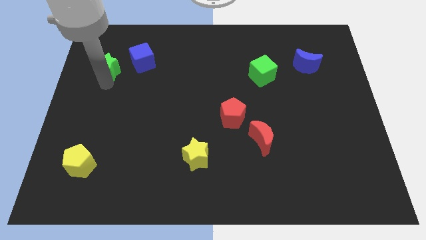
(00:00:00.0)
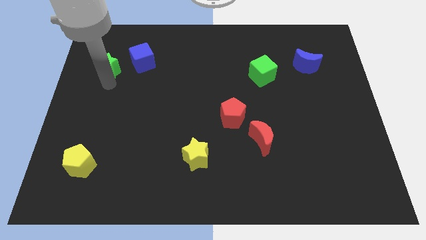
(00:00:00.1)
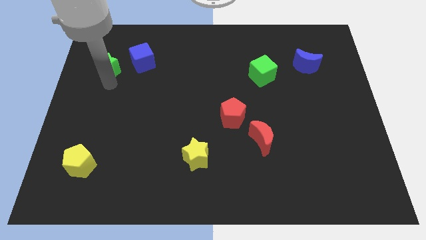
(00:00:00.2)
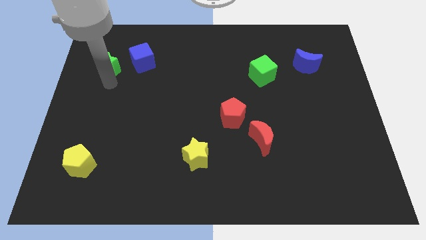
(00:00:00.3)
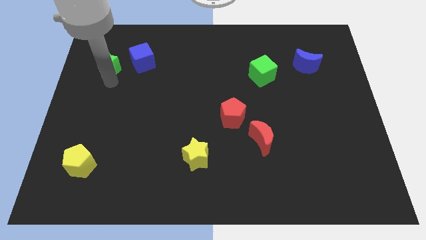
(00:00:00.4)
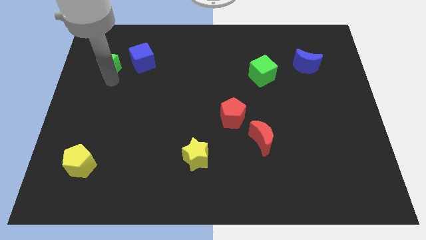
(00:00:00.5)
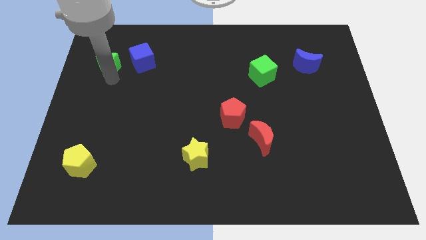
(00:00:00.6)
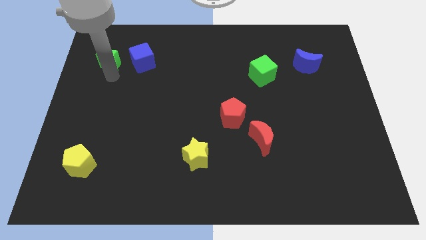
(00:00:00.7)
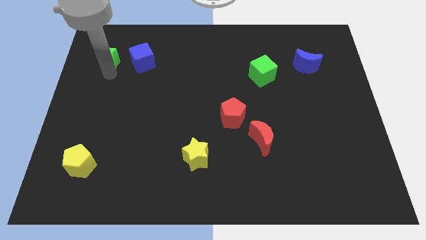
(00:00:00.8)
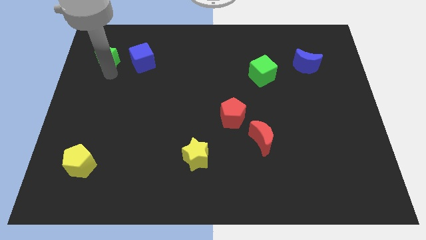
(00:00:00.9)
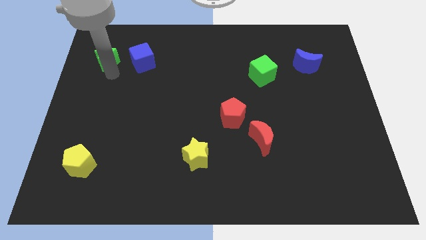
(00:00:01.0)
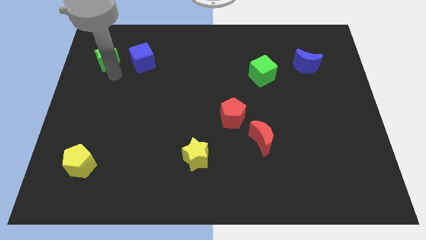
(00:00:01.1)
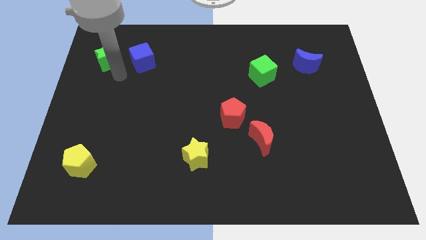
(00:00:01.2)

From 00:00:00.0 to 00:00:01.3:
push the green star parallel to blue cube

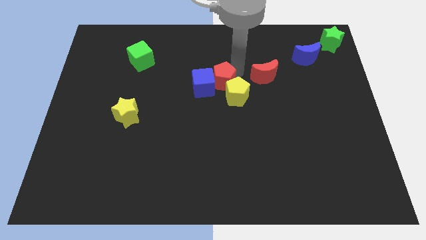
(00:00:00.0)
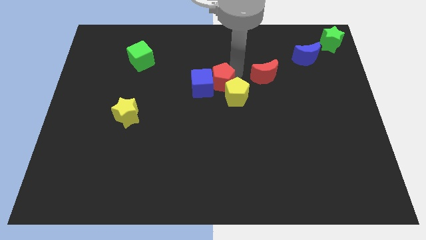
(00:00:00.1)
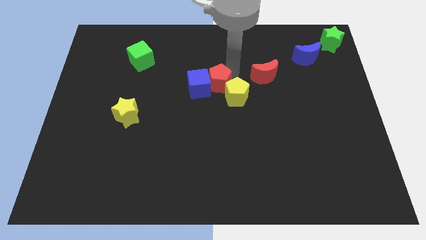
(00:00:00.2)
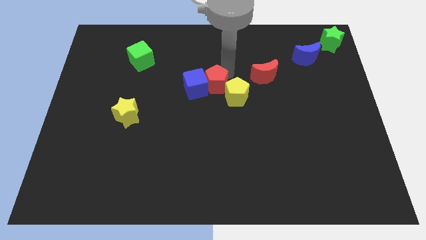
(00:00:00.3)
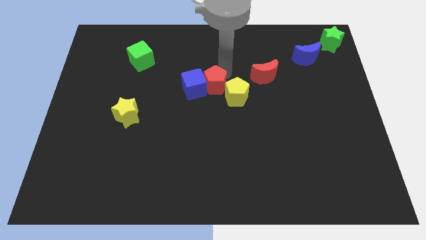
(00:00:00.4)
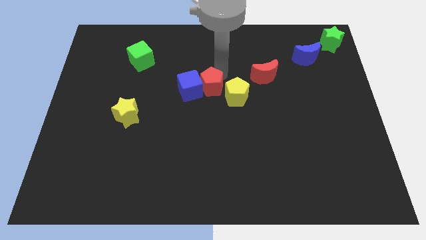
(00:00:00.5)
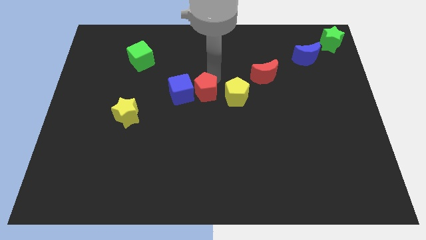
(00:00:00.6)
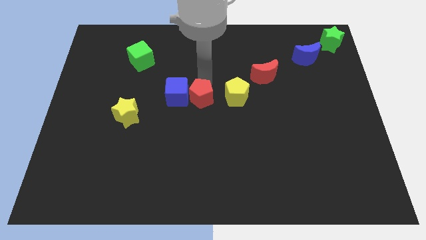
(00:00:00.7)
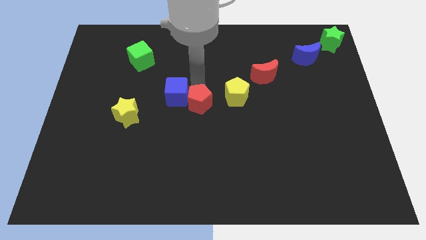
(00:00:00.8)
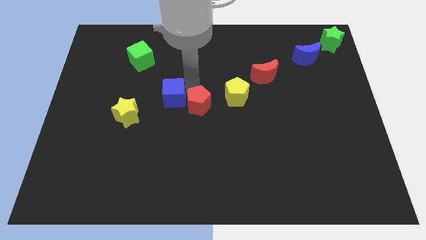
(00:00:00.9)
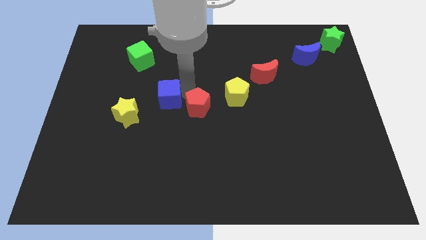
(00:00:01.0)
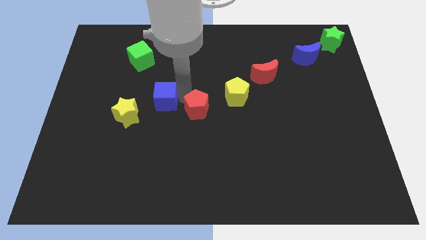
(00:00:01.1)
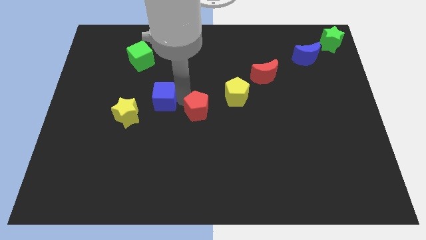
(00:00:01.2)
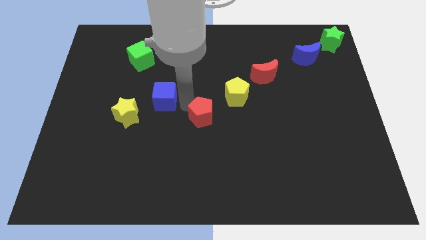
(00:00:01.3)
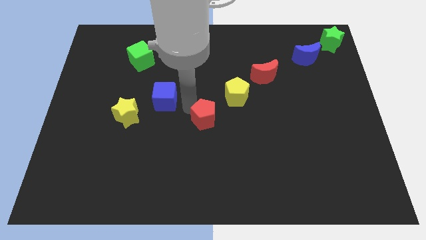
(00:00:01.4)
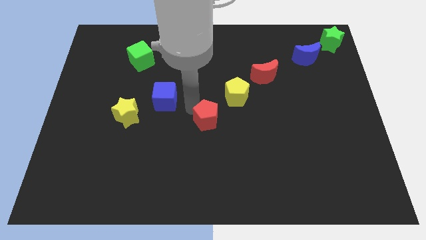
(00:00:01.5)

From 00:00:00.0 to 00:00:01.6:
separate the blue cube from the red pentagon

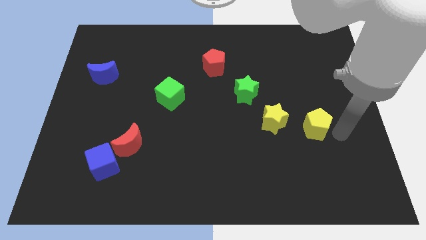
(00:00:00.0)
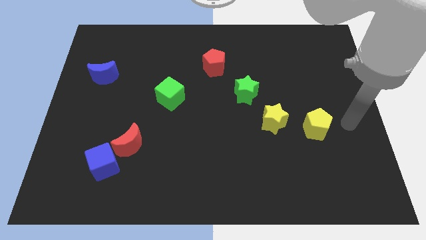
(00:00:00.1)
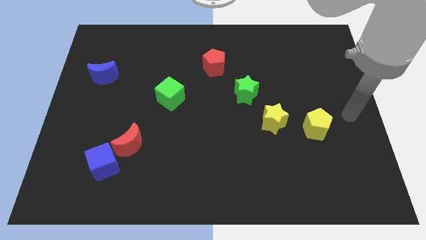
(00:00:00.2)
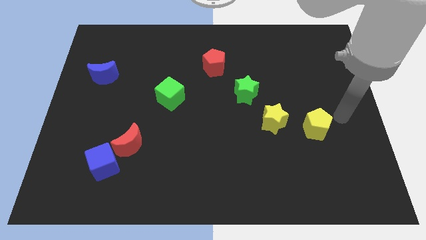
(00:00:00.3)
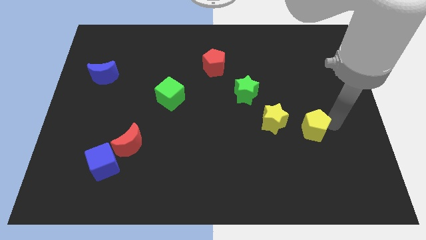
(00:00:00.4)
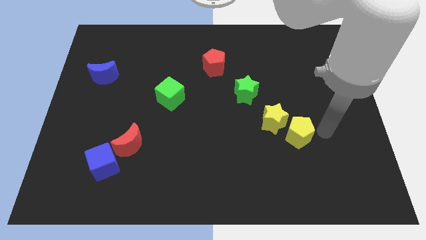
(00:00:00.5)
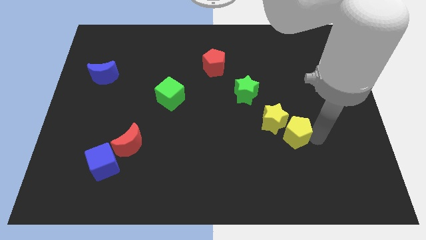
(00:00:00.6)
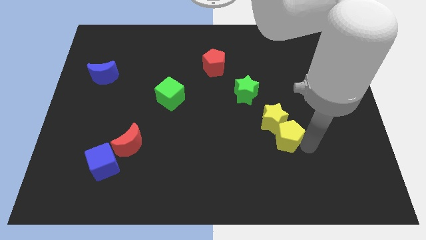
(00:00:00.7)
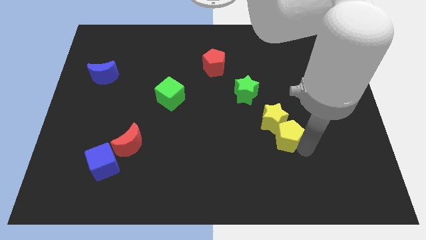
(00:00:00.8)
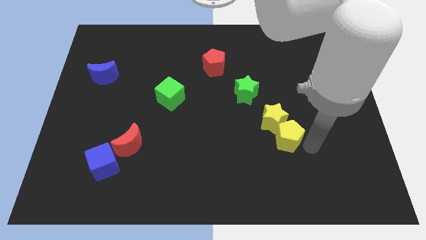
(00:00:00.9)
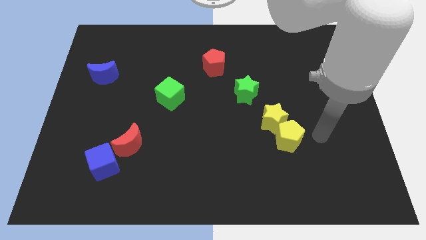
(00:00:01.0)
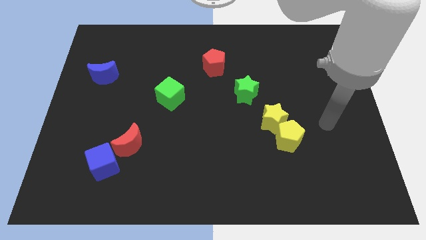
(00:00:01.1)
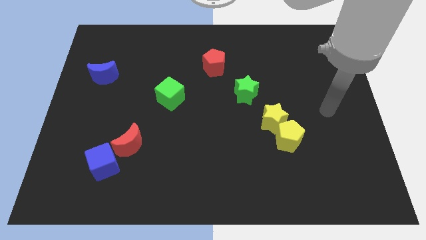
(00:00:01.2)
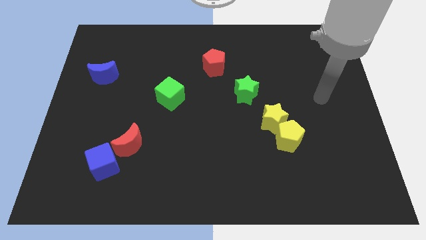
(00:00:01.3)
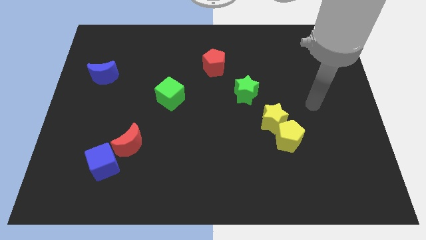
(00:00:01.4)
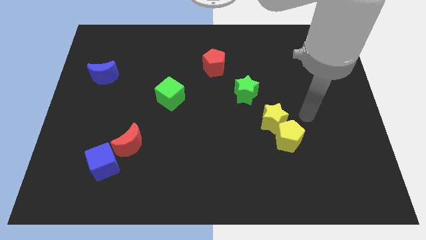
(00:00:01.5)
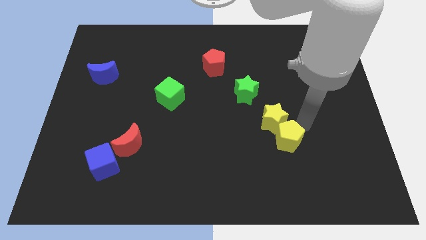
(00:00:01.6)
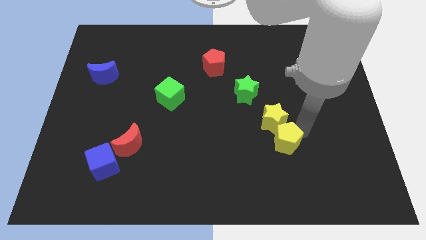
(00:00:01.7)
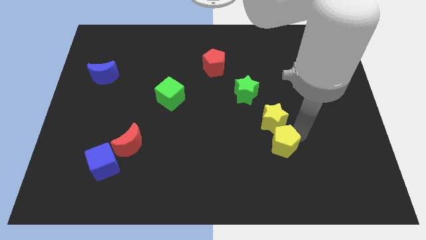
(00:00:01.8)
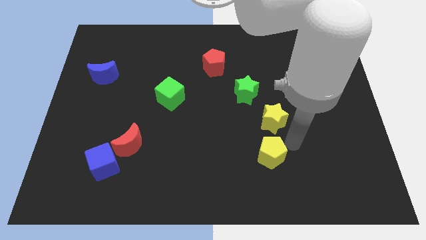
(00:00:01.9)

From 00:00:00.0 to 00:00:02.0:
move the yellow pentagon below the yellow star

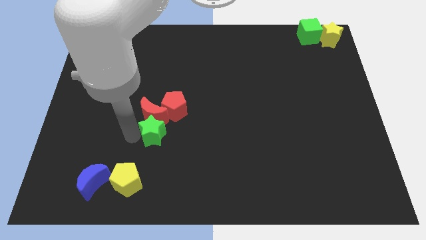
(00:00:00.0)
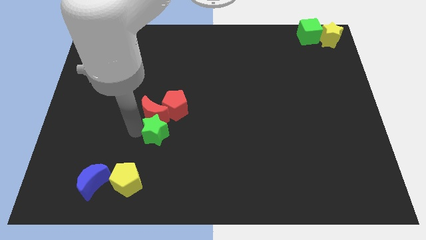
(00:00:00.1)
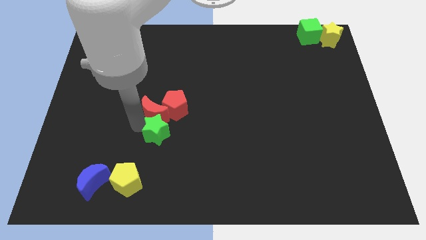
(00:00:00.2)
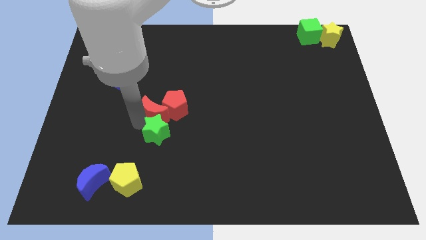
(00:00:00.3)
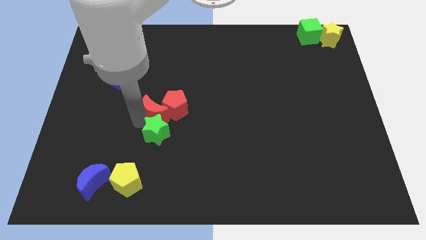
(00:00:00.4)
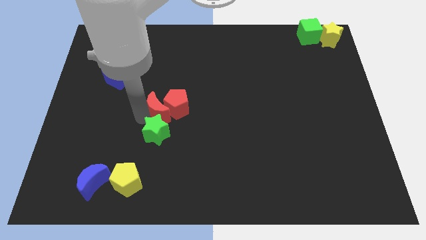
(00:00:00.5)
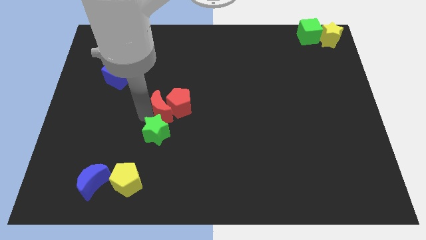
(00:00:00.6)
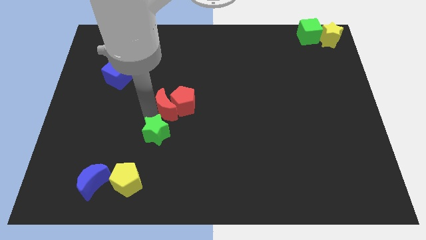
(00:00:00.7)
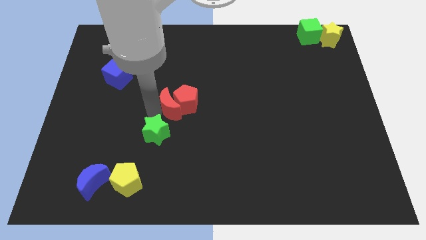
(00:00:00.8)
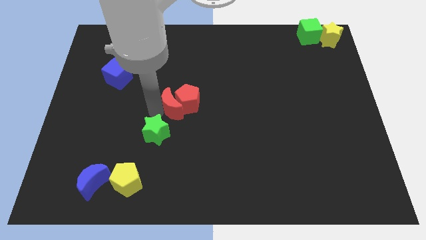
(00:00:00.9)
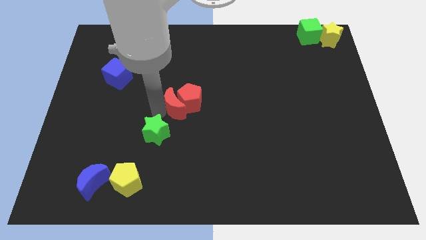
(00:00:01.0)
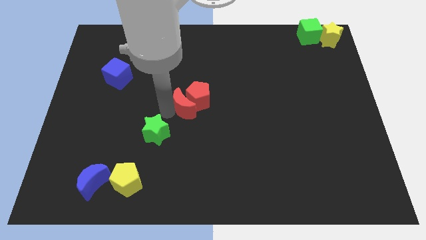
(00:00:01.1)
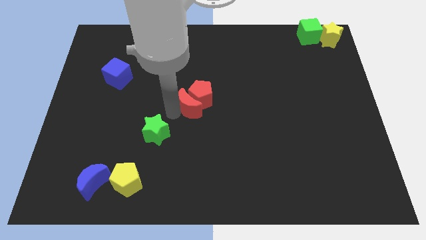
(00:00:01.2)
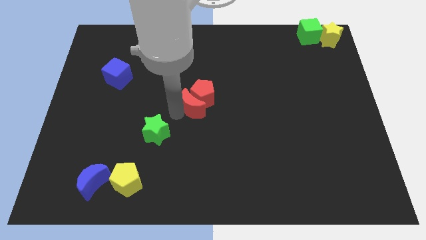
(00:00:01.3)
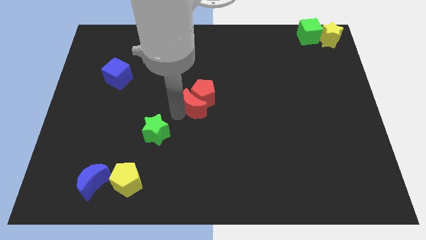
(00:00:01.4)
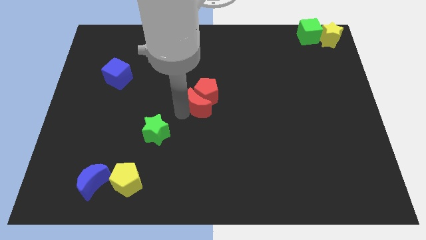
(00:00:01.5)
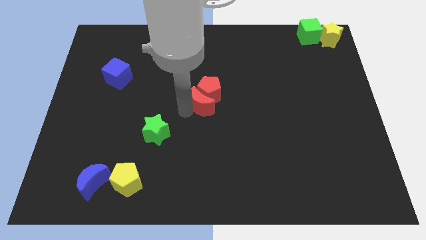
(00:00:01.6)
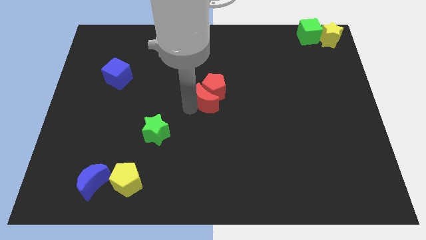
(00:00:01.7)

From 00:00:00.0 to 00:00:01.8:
take the group of red blocks away from the green star

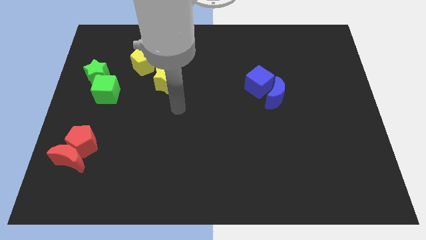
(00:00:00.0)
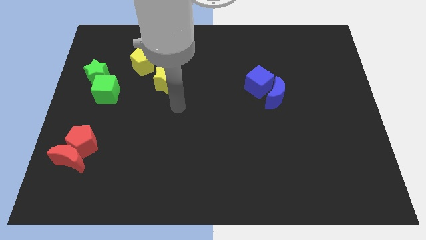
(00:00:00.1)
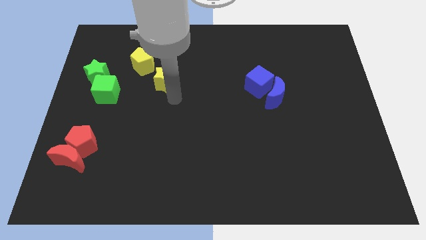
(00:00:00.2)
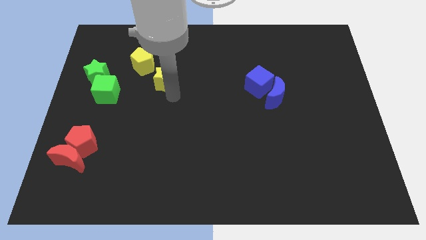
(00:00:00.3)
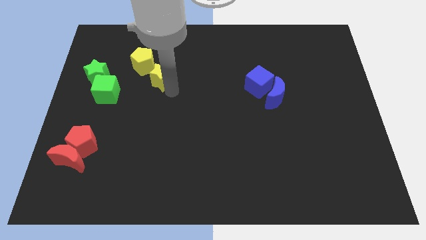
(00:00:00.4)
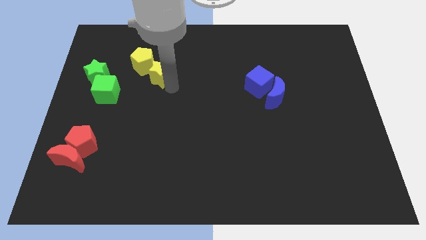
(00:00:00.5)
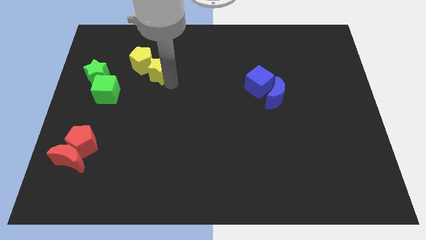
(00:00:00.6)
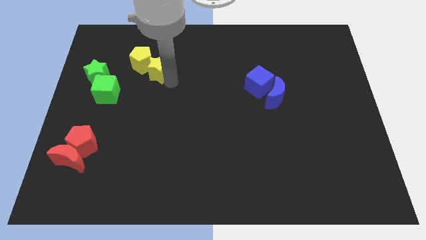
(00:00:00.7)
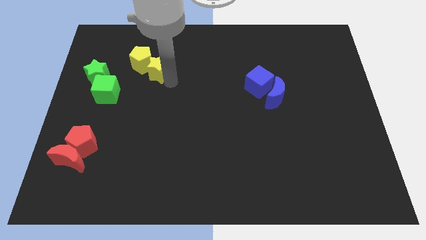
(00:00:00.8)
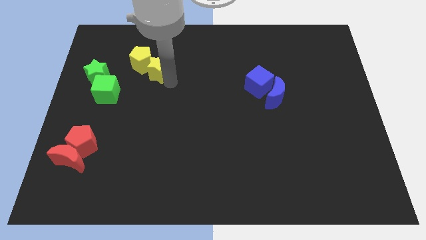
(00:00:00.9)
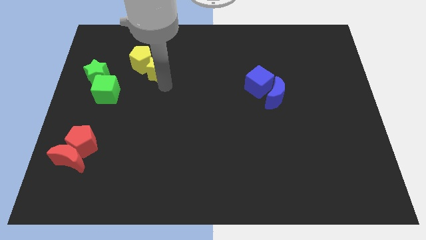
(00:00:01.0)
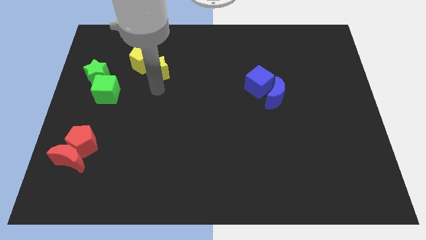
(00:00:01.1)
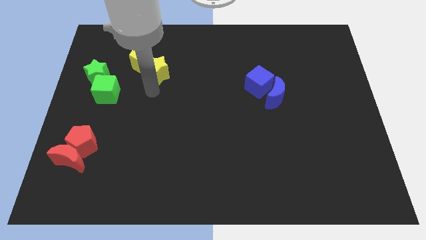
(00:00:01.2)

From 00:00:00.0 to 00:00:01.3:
push the yellow star into the yellow pentagon

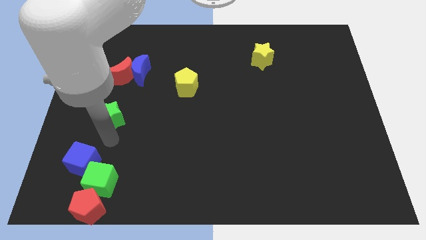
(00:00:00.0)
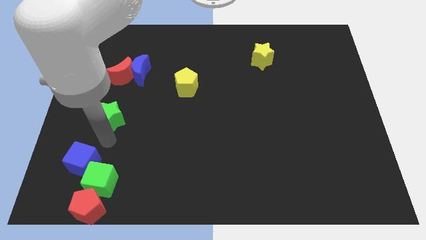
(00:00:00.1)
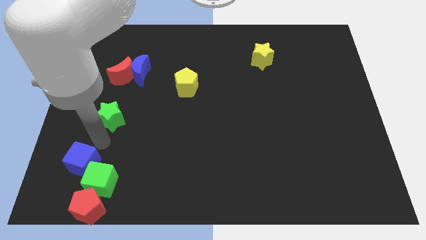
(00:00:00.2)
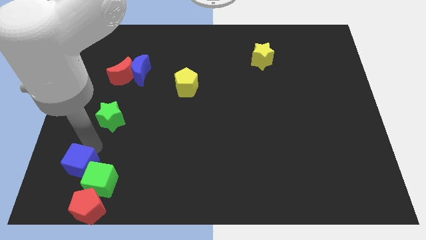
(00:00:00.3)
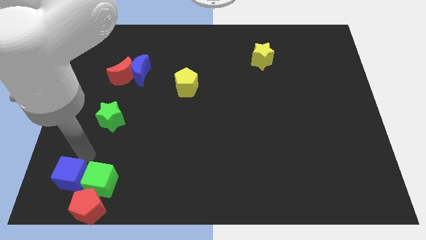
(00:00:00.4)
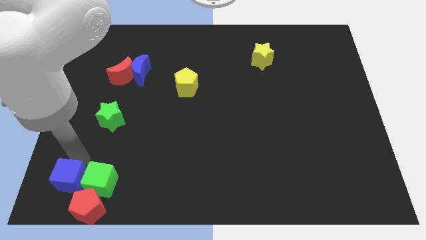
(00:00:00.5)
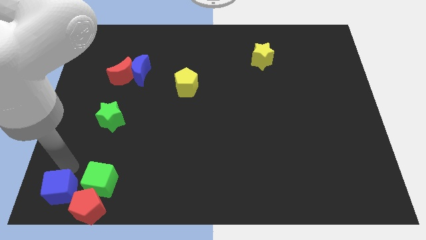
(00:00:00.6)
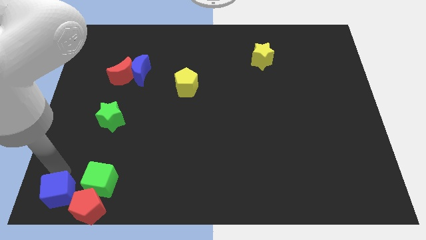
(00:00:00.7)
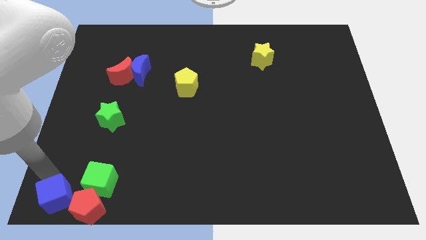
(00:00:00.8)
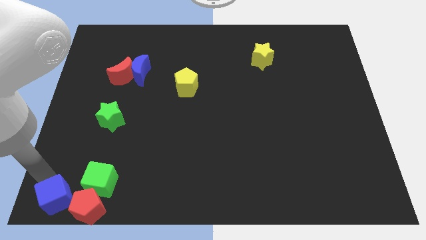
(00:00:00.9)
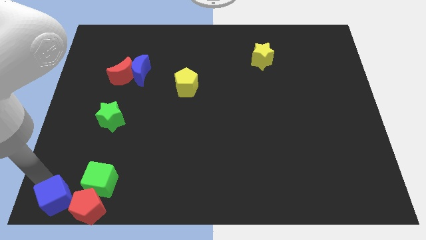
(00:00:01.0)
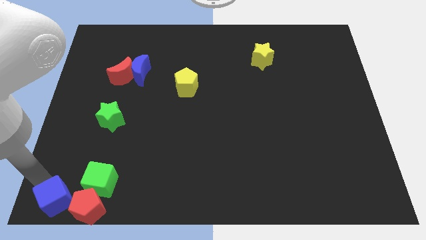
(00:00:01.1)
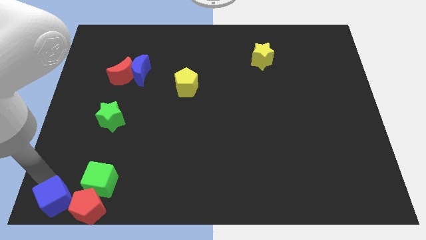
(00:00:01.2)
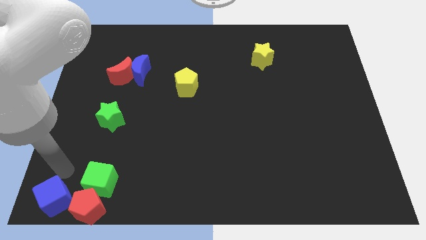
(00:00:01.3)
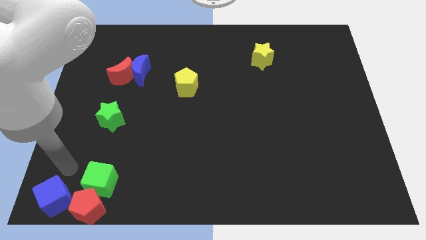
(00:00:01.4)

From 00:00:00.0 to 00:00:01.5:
place the blue cube left to the red pentagon
